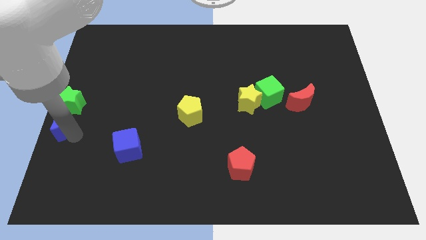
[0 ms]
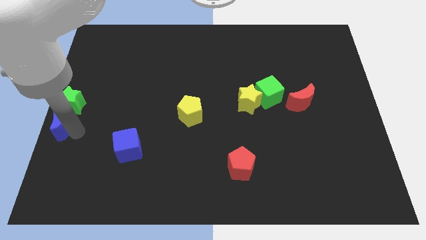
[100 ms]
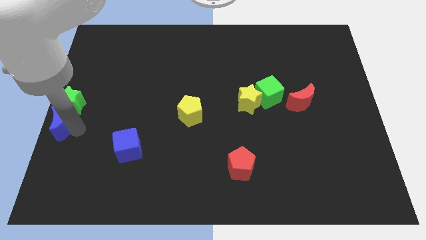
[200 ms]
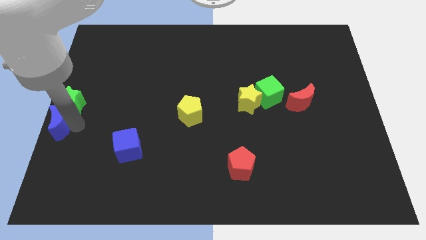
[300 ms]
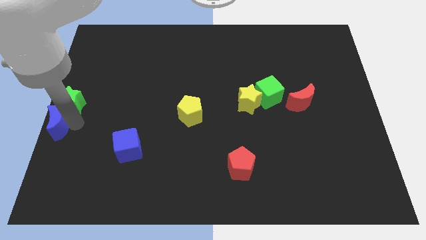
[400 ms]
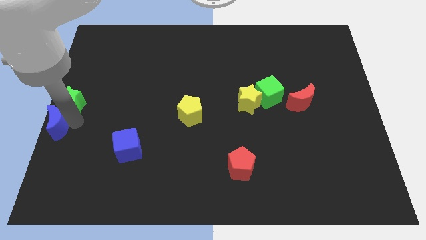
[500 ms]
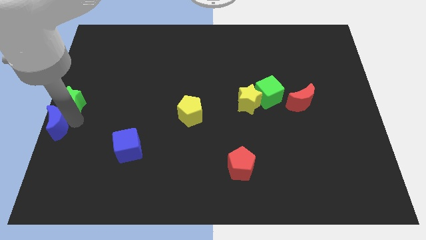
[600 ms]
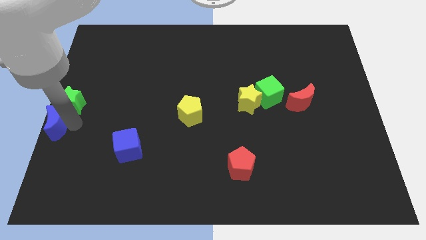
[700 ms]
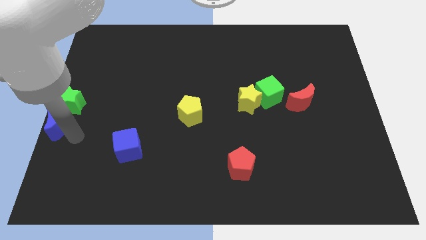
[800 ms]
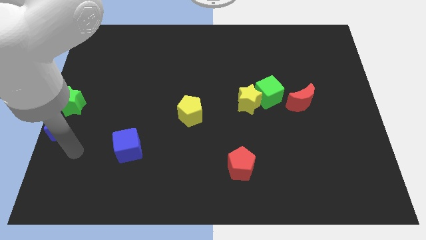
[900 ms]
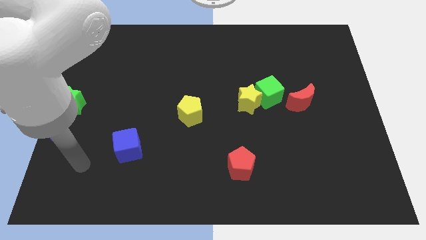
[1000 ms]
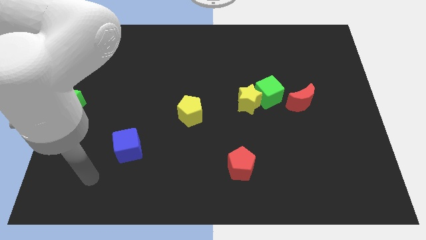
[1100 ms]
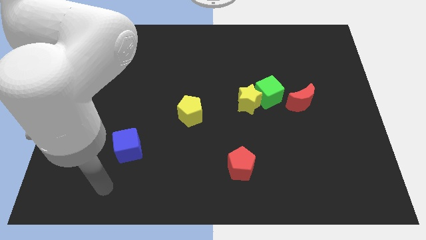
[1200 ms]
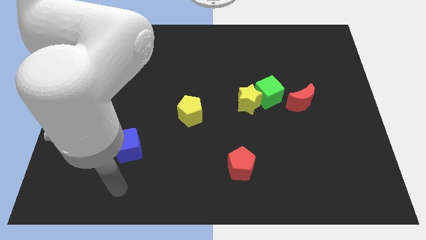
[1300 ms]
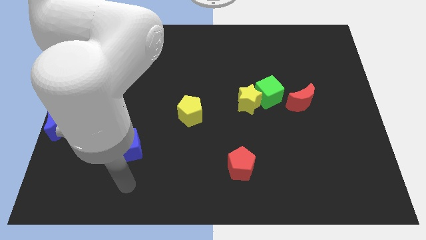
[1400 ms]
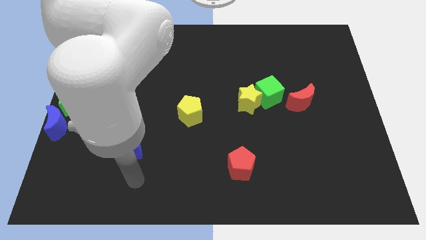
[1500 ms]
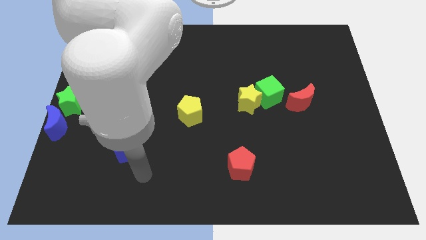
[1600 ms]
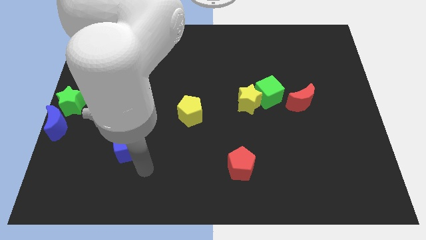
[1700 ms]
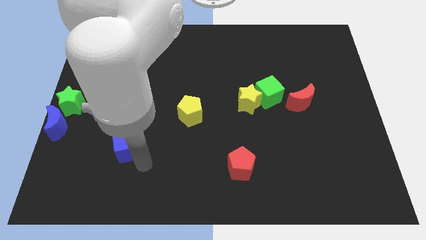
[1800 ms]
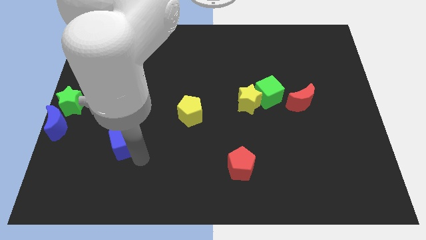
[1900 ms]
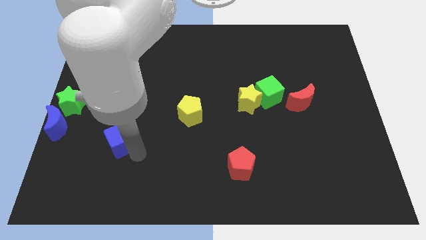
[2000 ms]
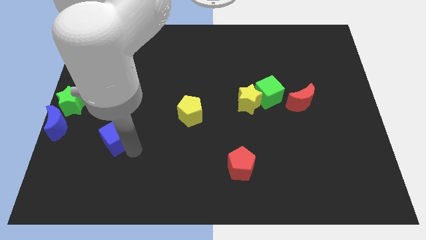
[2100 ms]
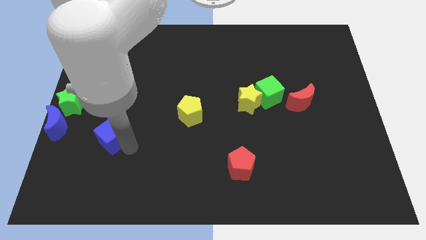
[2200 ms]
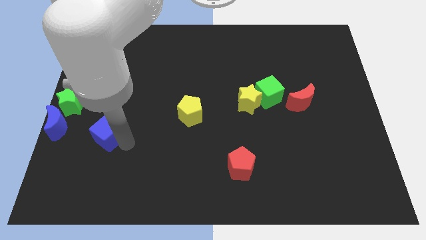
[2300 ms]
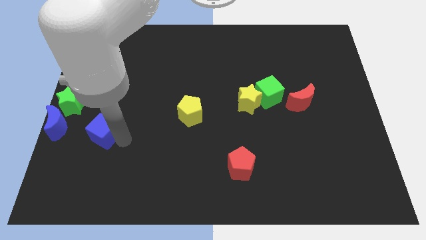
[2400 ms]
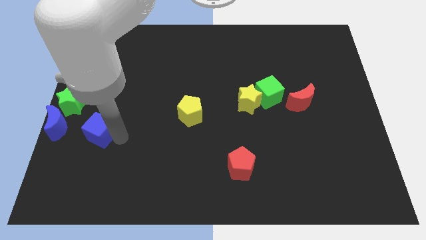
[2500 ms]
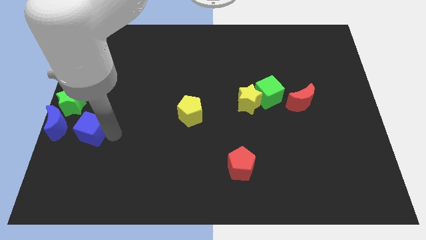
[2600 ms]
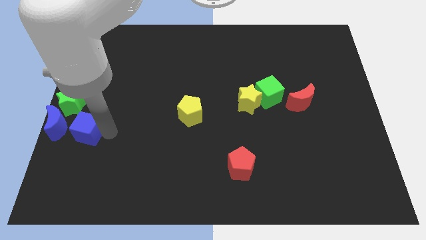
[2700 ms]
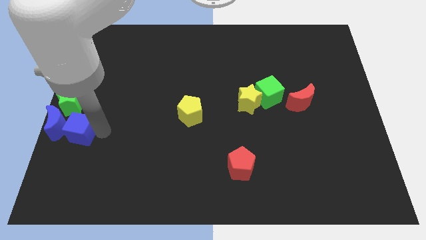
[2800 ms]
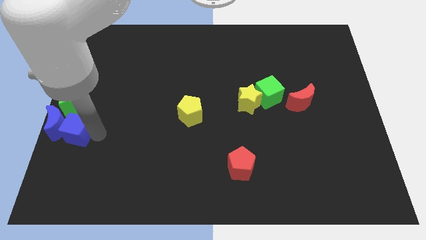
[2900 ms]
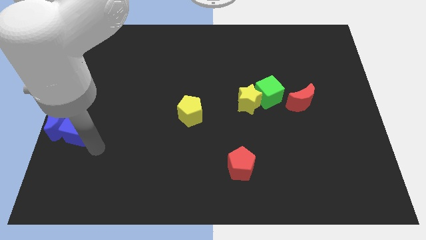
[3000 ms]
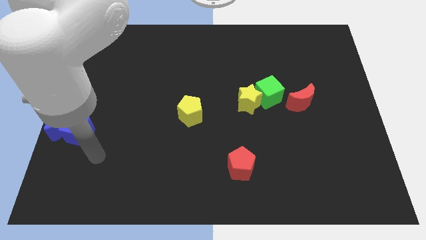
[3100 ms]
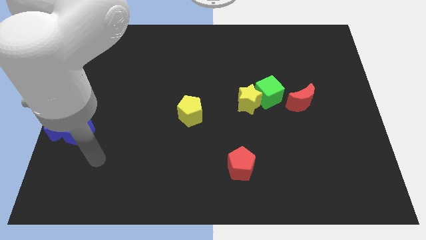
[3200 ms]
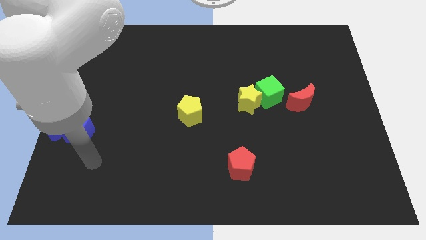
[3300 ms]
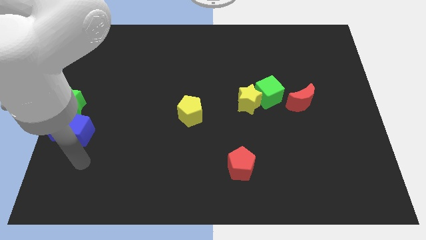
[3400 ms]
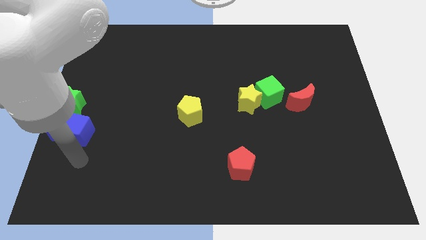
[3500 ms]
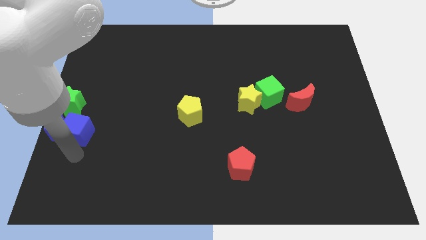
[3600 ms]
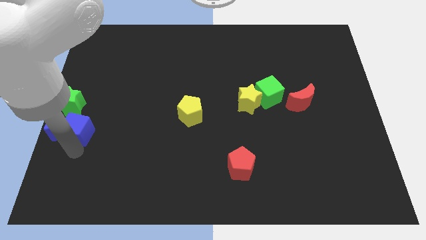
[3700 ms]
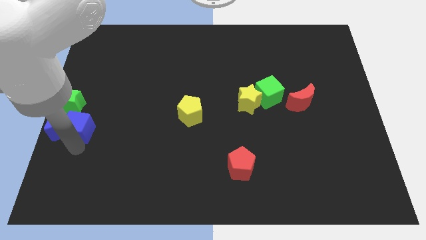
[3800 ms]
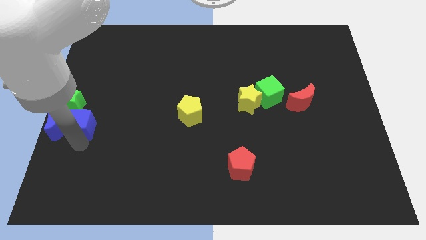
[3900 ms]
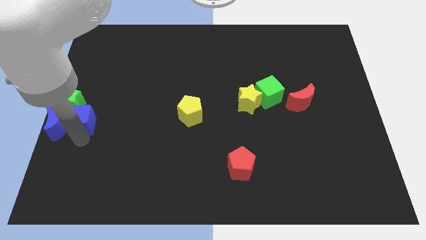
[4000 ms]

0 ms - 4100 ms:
push blue cube to the right of blue moon

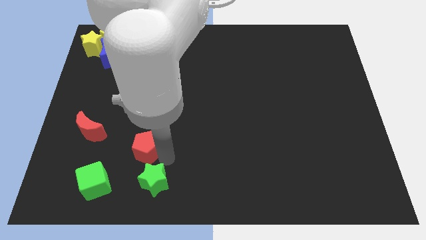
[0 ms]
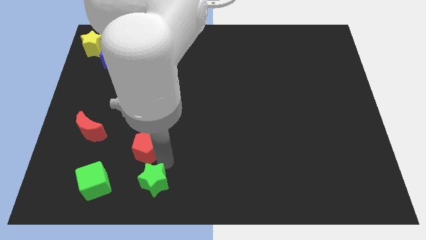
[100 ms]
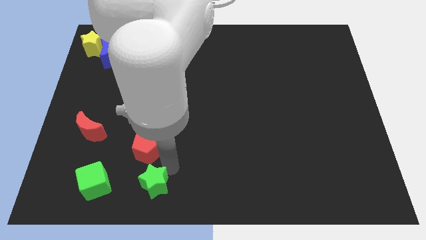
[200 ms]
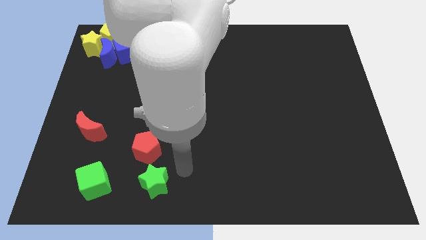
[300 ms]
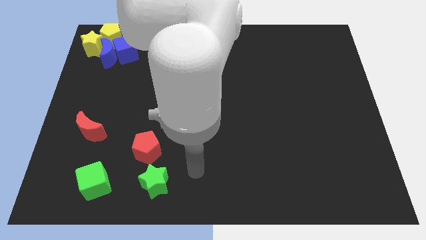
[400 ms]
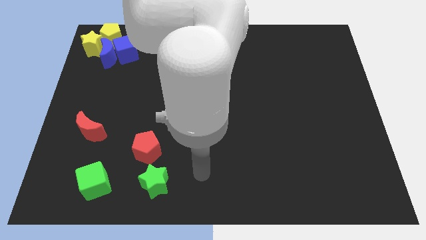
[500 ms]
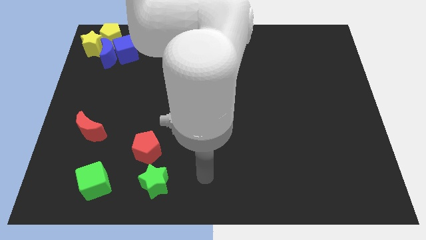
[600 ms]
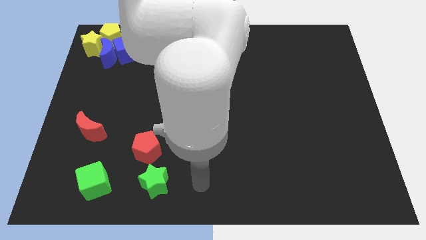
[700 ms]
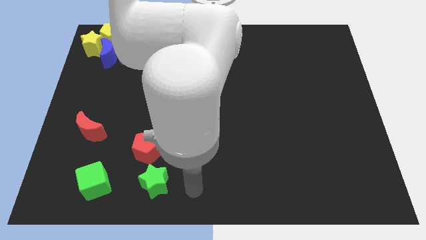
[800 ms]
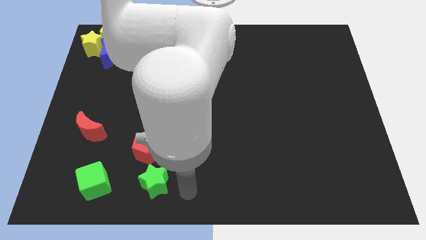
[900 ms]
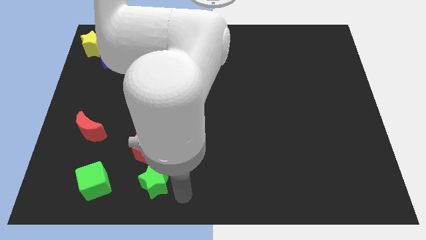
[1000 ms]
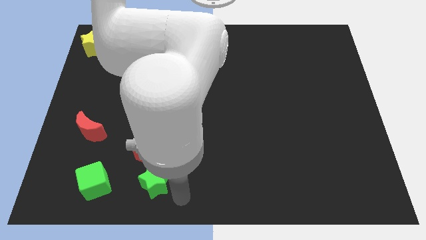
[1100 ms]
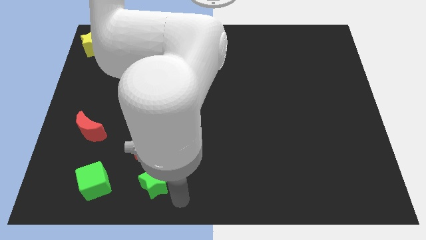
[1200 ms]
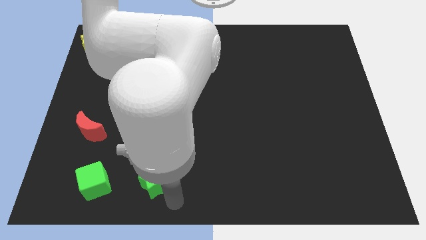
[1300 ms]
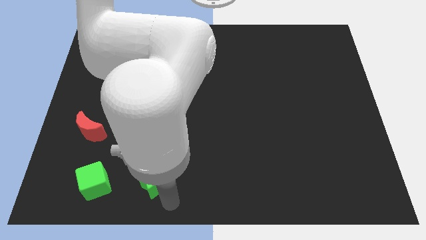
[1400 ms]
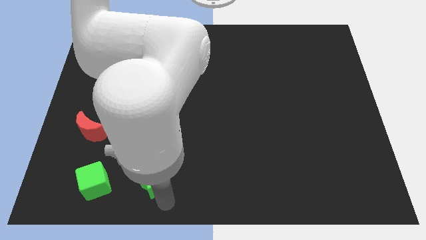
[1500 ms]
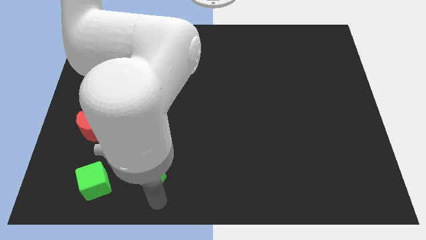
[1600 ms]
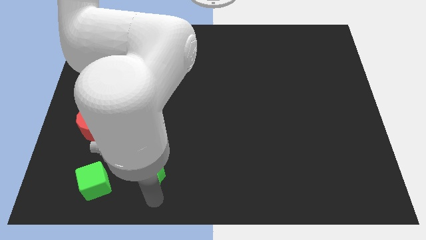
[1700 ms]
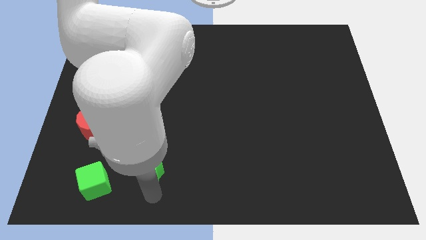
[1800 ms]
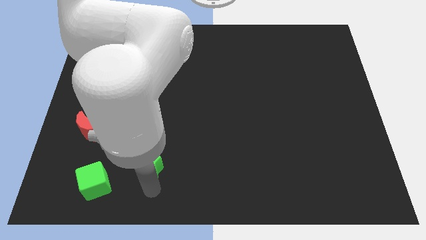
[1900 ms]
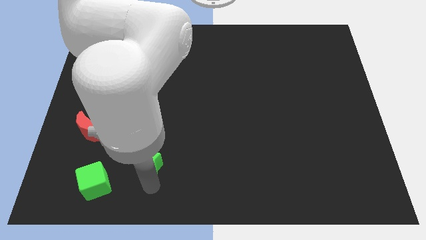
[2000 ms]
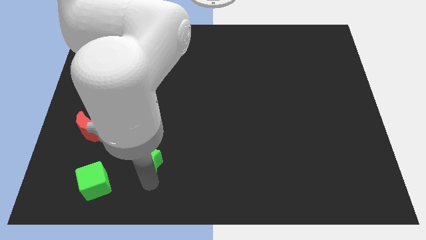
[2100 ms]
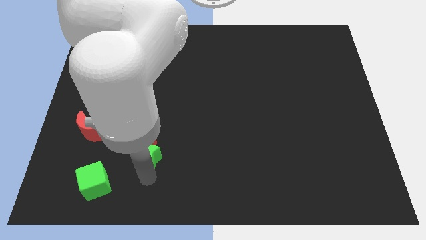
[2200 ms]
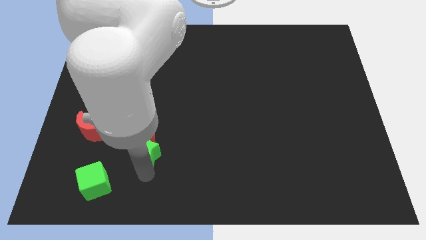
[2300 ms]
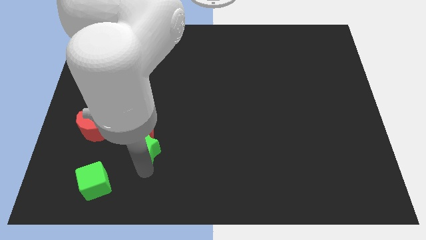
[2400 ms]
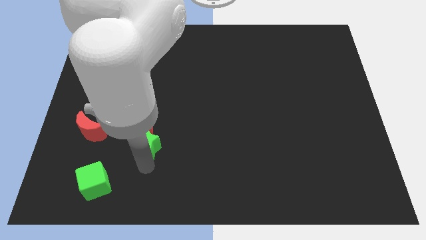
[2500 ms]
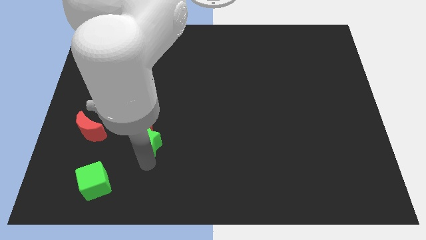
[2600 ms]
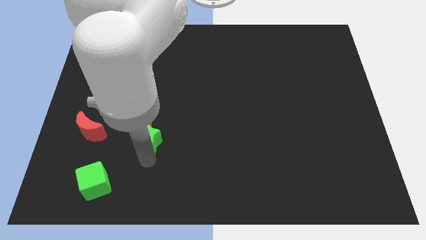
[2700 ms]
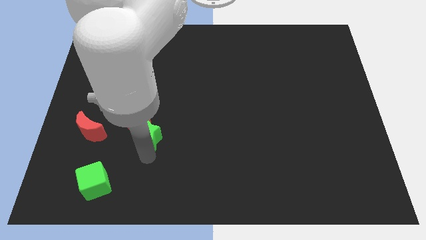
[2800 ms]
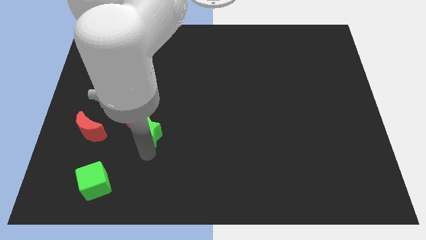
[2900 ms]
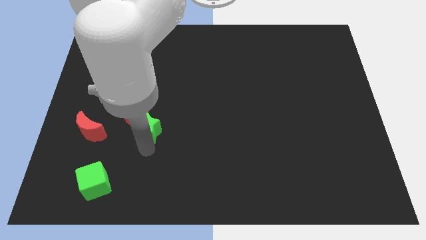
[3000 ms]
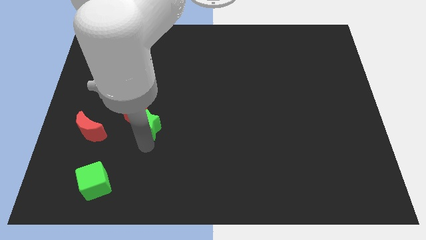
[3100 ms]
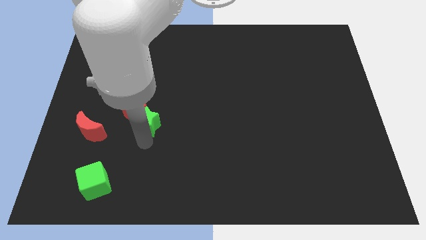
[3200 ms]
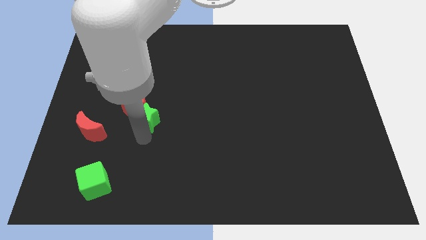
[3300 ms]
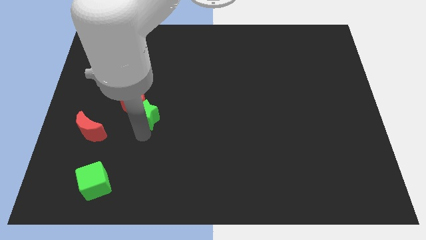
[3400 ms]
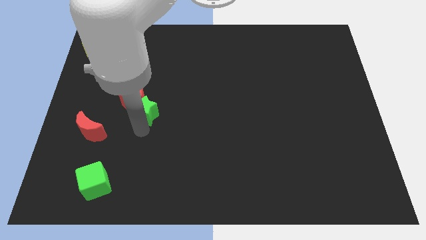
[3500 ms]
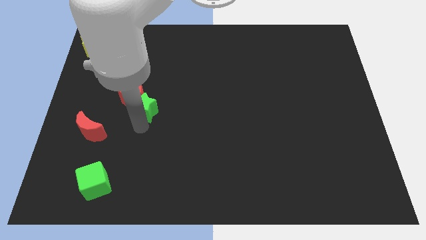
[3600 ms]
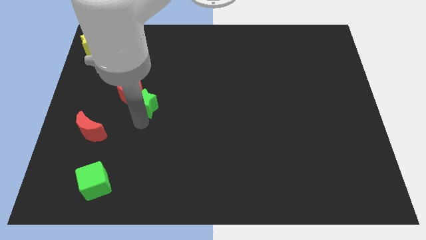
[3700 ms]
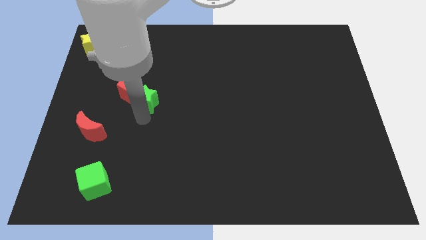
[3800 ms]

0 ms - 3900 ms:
push the green star into the red pentagon

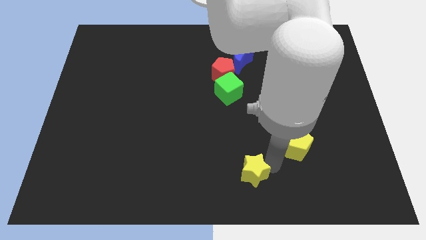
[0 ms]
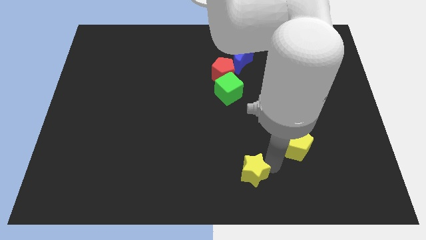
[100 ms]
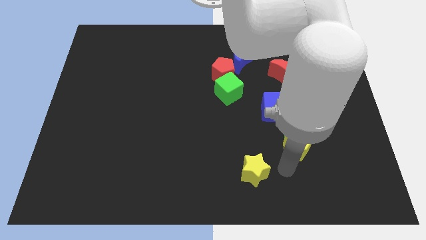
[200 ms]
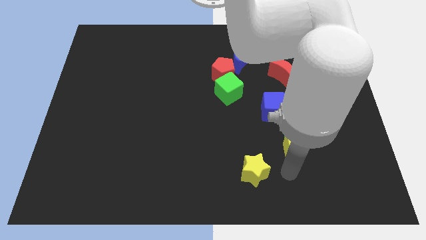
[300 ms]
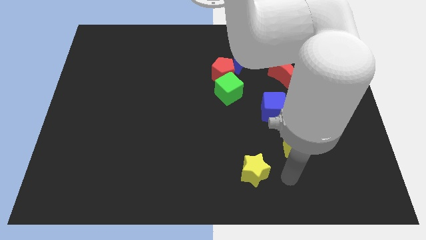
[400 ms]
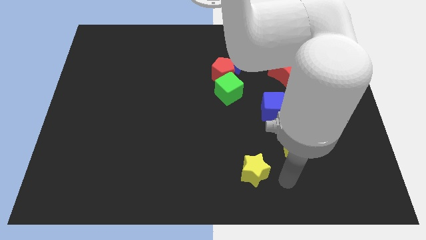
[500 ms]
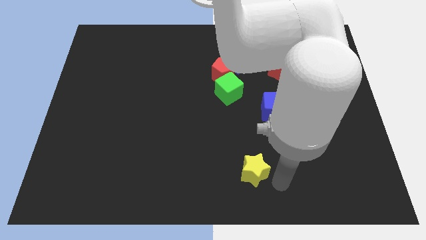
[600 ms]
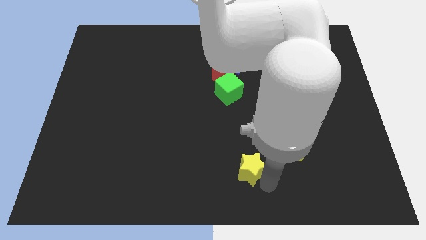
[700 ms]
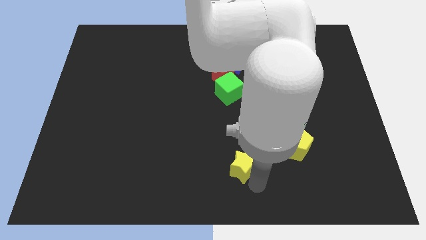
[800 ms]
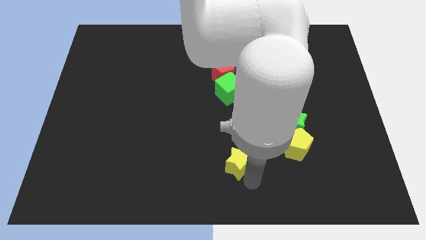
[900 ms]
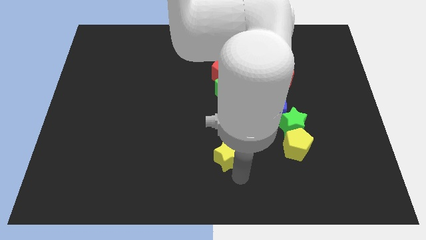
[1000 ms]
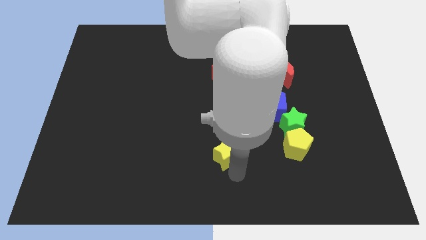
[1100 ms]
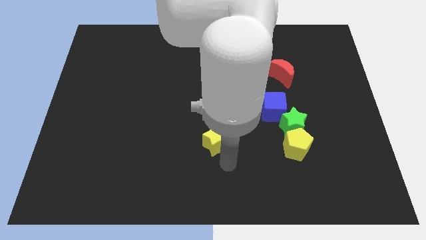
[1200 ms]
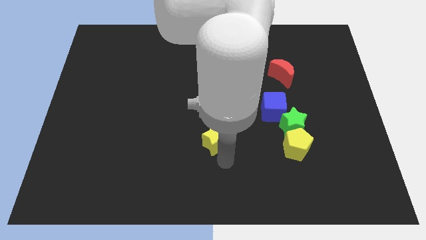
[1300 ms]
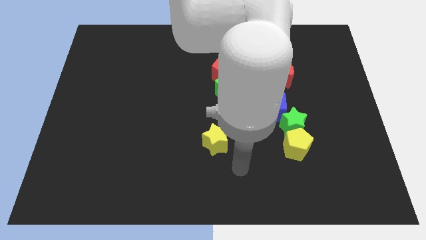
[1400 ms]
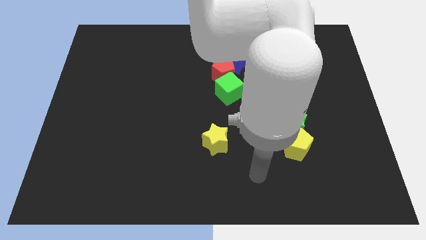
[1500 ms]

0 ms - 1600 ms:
push the yellow star parallel left to the yellow pentagon
